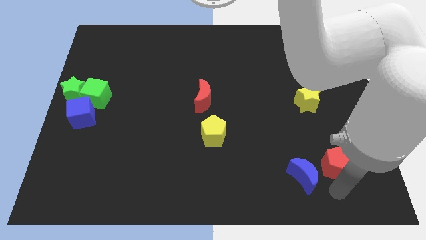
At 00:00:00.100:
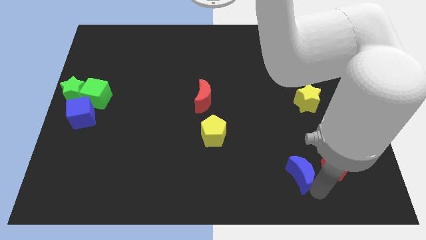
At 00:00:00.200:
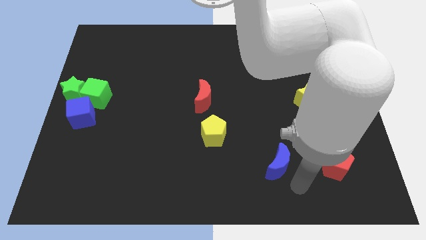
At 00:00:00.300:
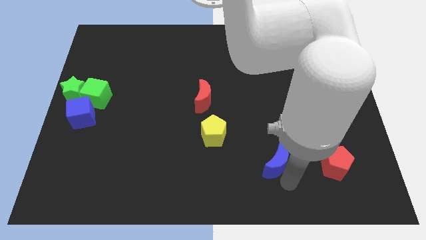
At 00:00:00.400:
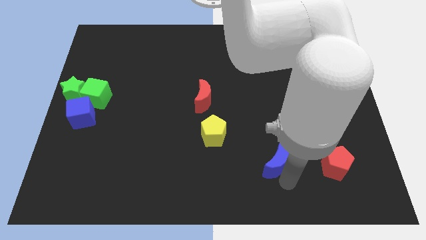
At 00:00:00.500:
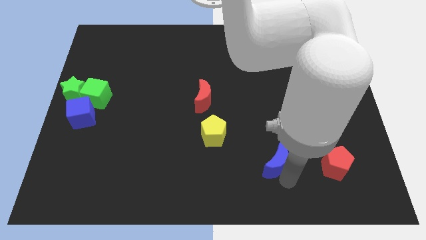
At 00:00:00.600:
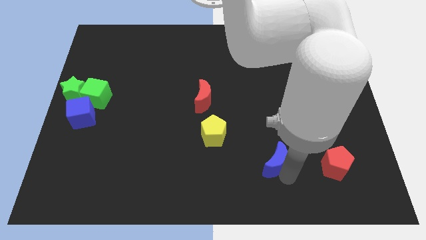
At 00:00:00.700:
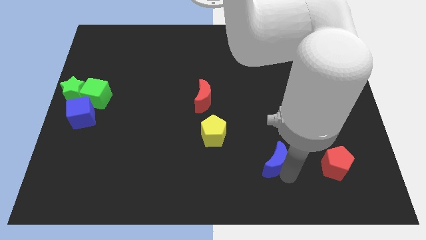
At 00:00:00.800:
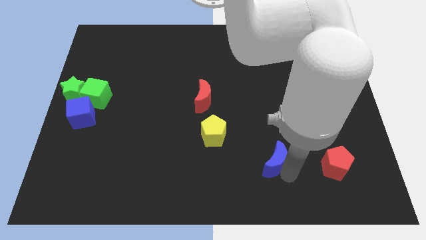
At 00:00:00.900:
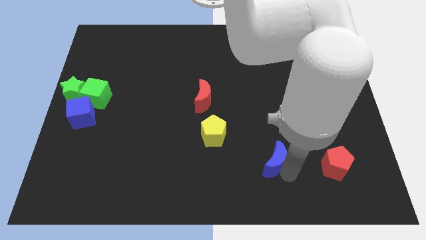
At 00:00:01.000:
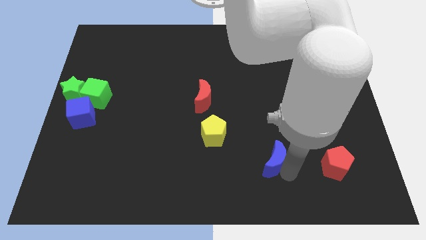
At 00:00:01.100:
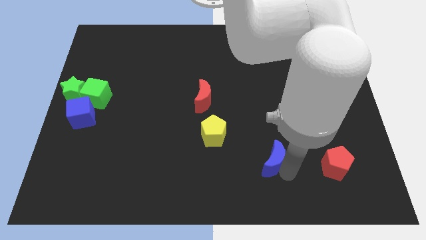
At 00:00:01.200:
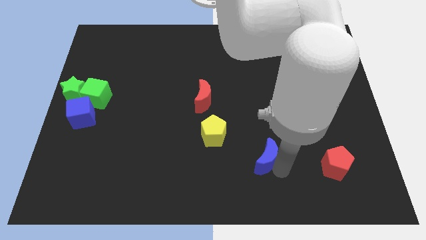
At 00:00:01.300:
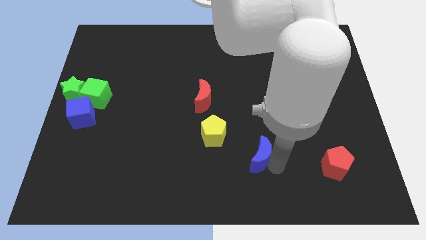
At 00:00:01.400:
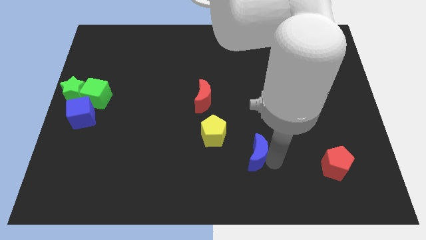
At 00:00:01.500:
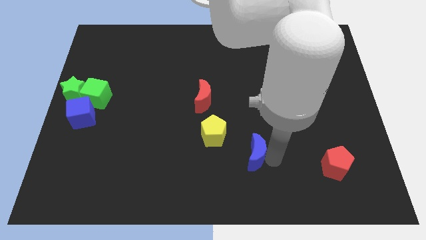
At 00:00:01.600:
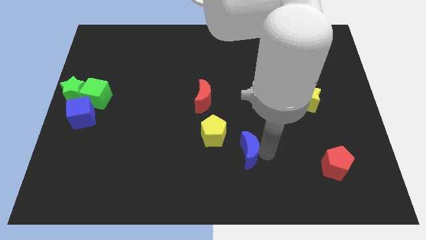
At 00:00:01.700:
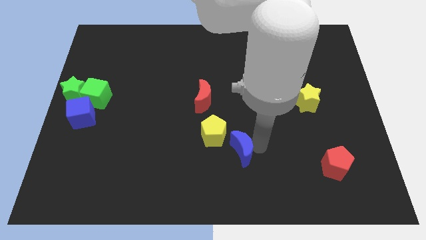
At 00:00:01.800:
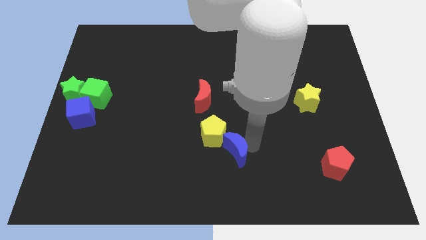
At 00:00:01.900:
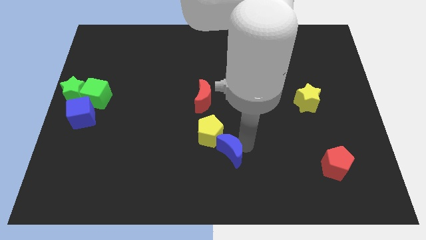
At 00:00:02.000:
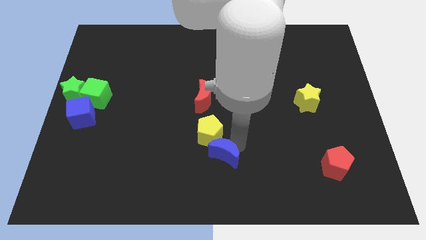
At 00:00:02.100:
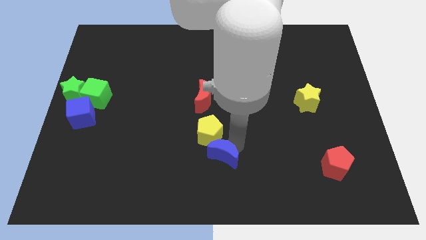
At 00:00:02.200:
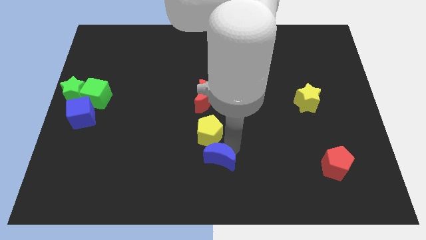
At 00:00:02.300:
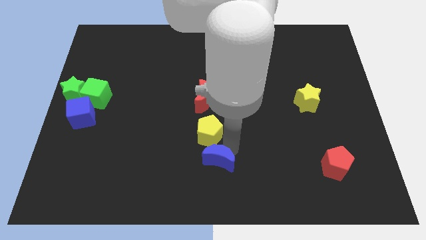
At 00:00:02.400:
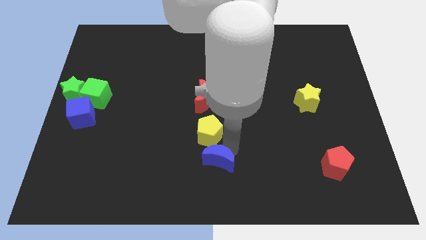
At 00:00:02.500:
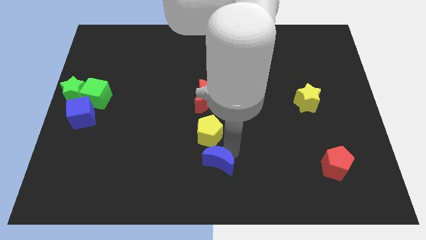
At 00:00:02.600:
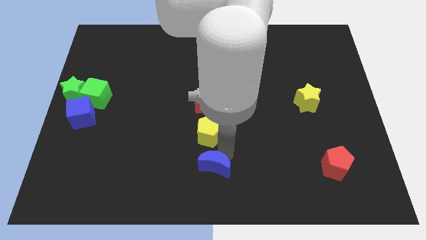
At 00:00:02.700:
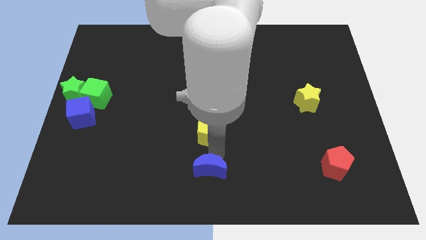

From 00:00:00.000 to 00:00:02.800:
place blue crescent below yellow pentagon

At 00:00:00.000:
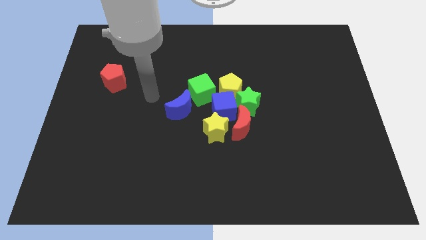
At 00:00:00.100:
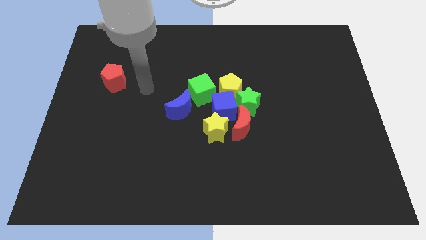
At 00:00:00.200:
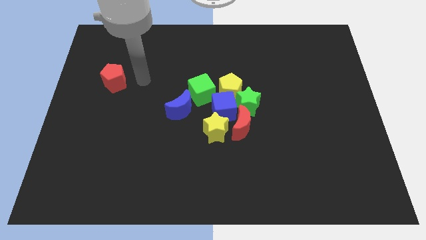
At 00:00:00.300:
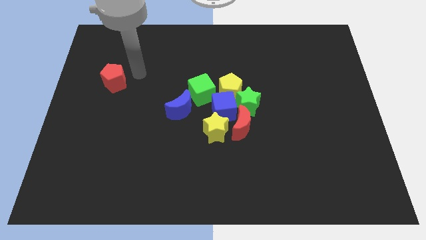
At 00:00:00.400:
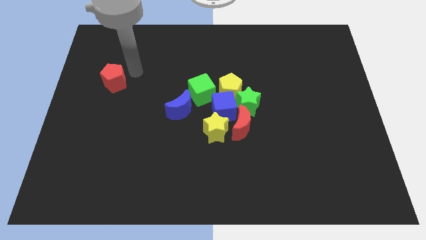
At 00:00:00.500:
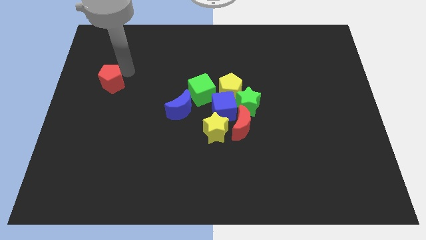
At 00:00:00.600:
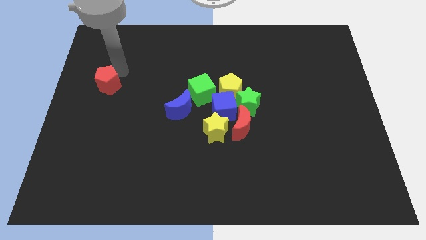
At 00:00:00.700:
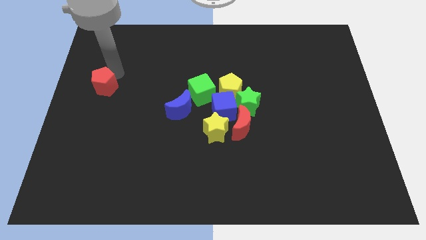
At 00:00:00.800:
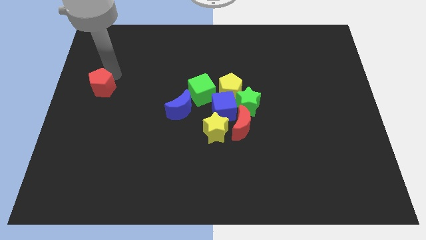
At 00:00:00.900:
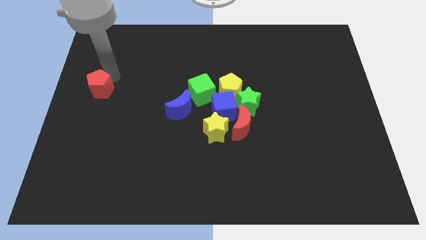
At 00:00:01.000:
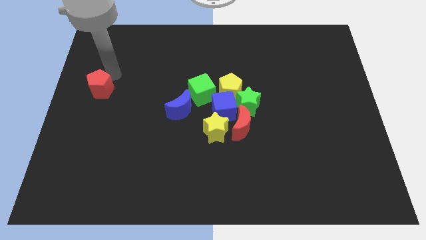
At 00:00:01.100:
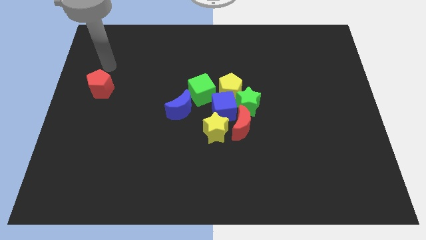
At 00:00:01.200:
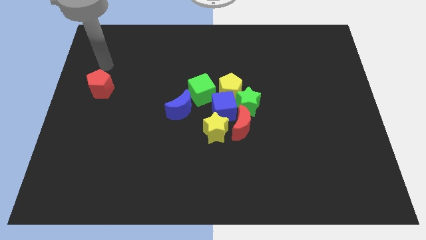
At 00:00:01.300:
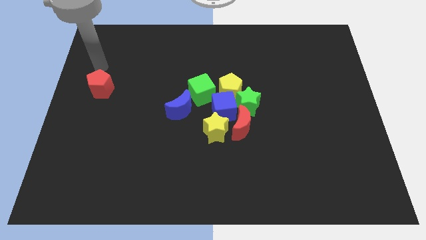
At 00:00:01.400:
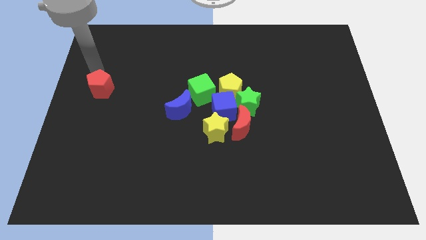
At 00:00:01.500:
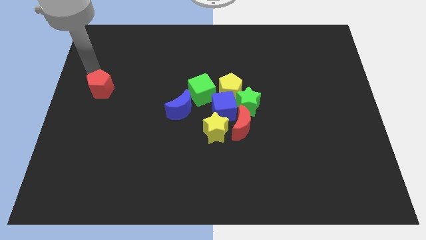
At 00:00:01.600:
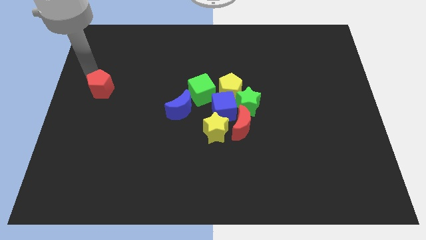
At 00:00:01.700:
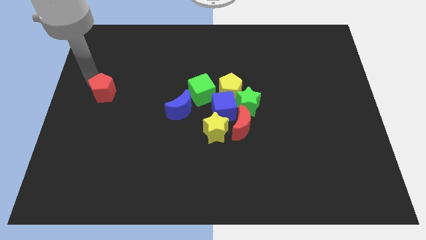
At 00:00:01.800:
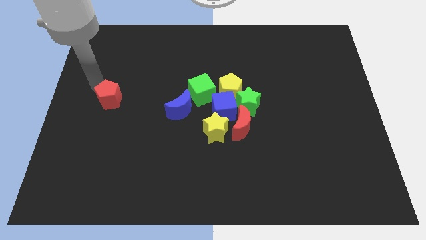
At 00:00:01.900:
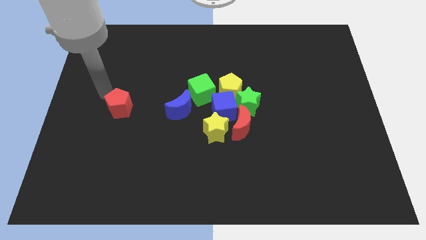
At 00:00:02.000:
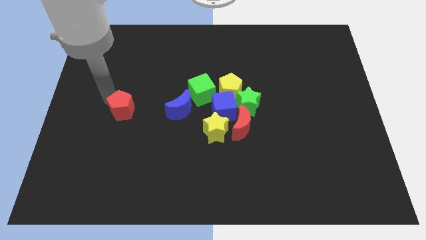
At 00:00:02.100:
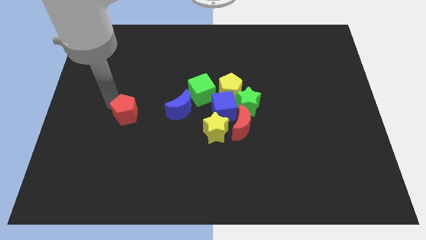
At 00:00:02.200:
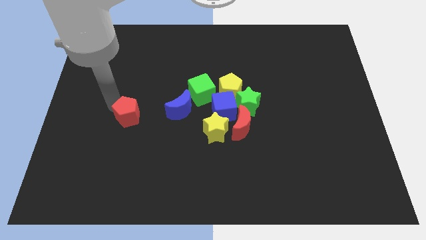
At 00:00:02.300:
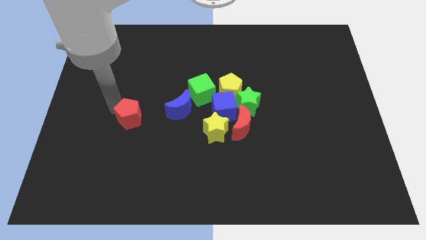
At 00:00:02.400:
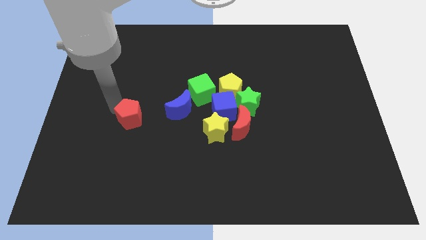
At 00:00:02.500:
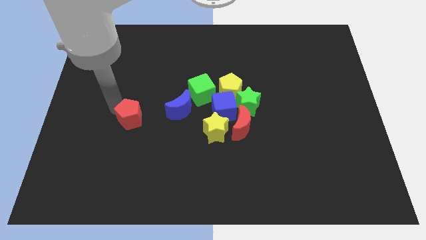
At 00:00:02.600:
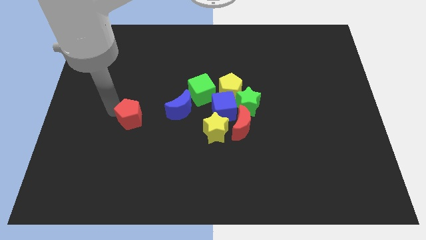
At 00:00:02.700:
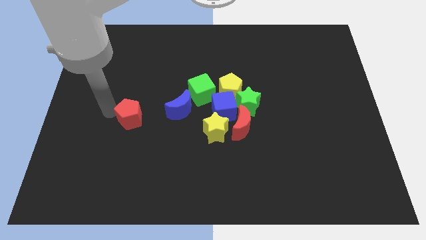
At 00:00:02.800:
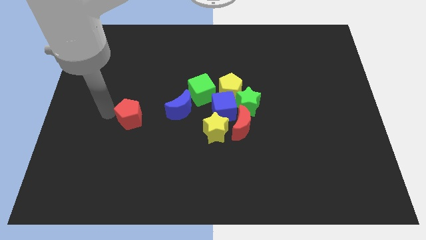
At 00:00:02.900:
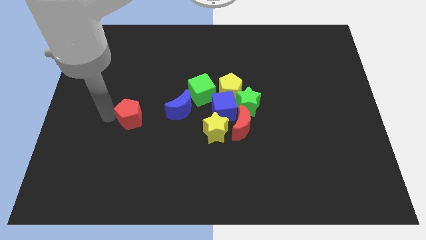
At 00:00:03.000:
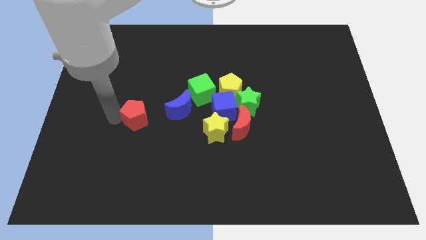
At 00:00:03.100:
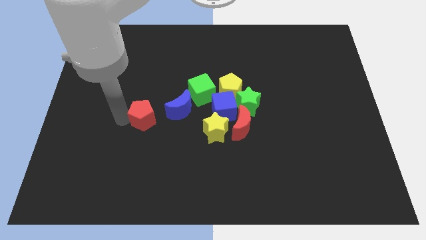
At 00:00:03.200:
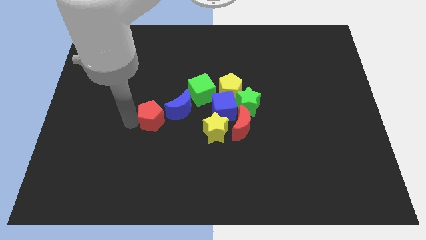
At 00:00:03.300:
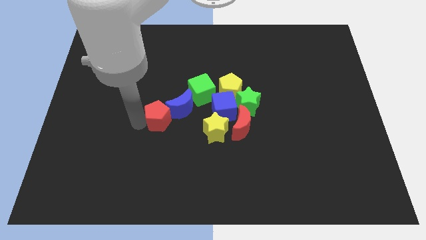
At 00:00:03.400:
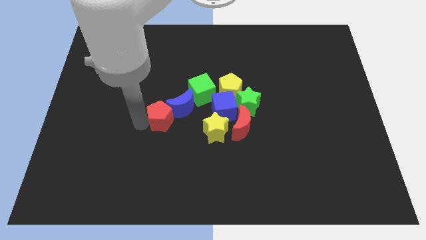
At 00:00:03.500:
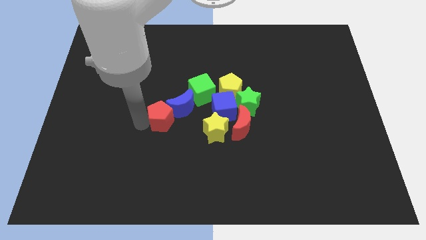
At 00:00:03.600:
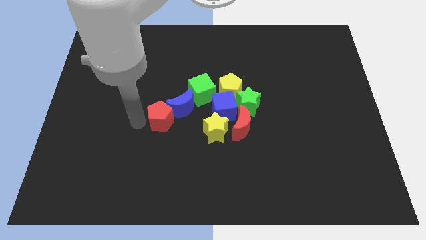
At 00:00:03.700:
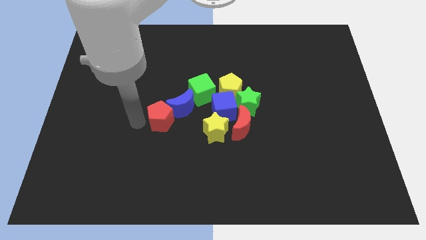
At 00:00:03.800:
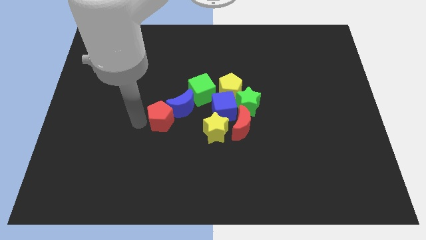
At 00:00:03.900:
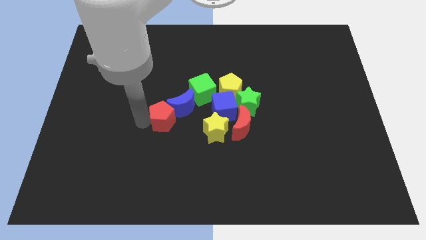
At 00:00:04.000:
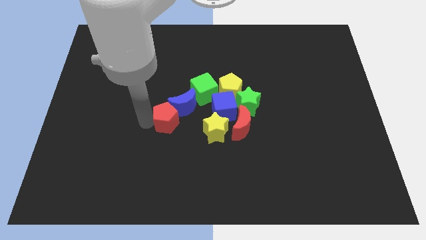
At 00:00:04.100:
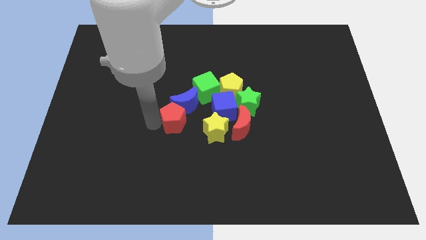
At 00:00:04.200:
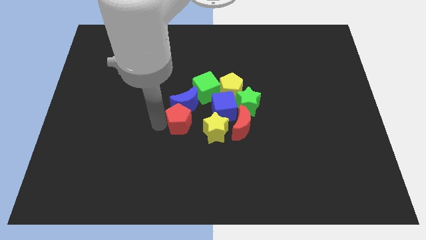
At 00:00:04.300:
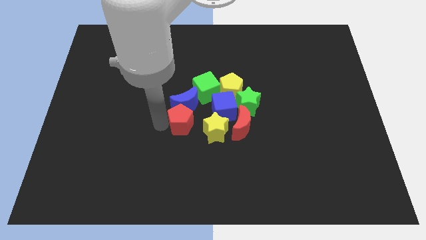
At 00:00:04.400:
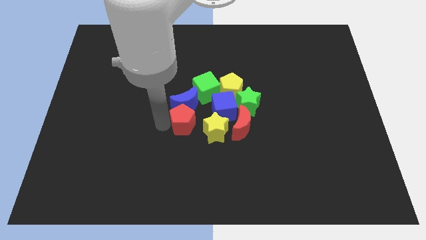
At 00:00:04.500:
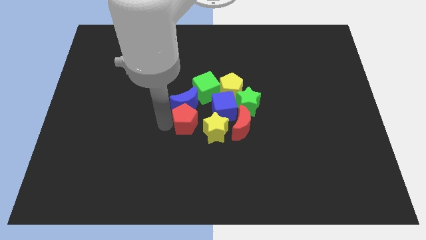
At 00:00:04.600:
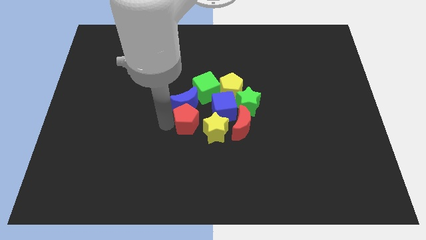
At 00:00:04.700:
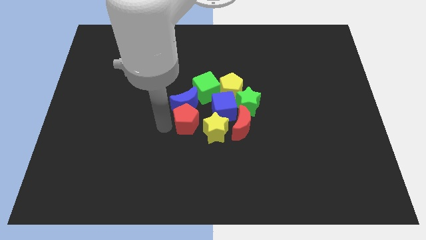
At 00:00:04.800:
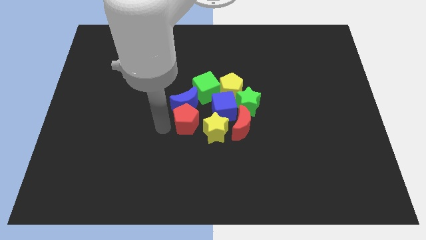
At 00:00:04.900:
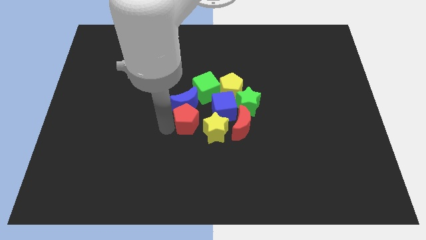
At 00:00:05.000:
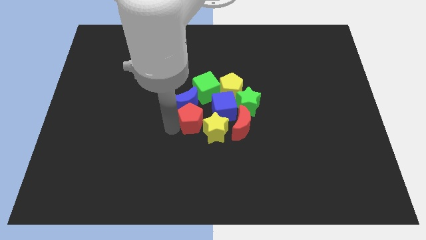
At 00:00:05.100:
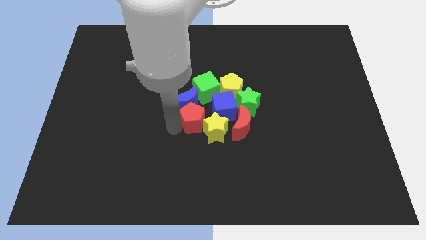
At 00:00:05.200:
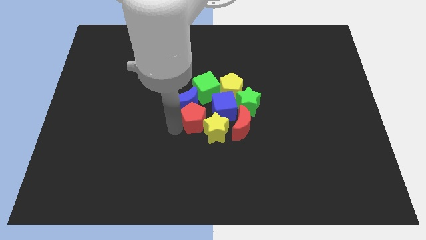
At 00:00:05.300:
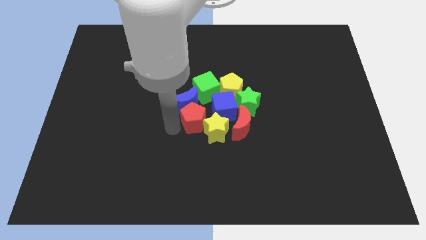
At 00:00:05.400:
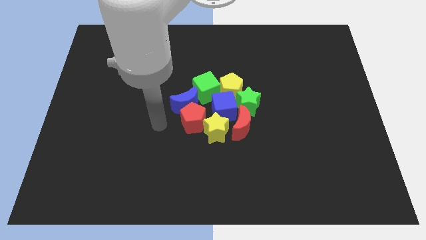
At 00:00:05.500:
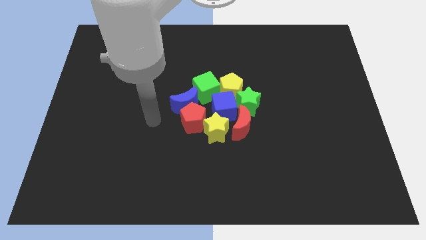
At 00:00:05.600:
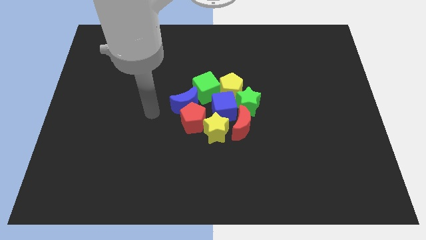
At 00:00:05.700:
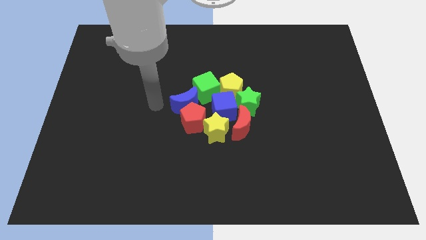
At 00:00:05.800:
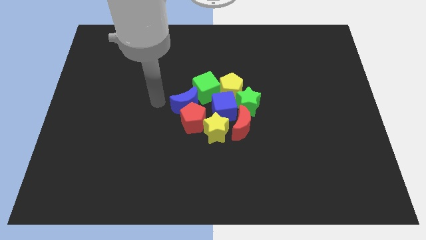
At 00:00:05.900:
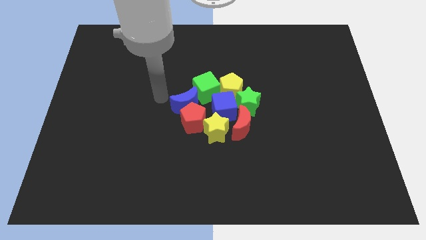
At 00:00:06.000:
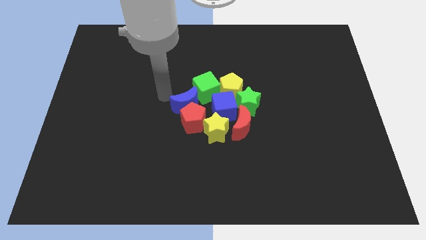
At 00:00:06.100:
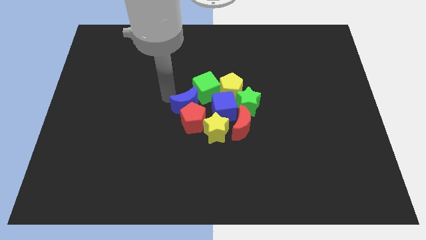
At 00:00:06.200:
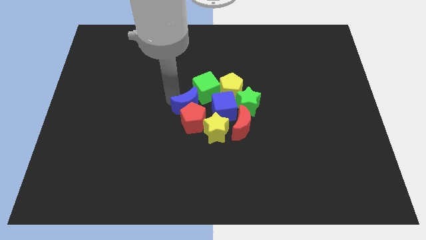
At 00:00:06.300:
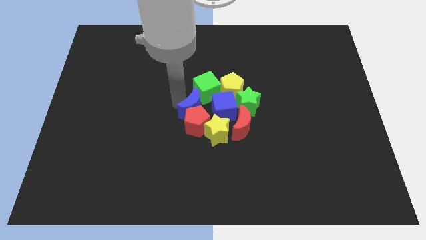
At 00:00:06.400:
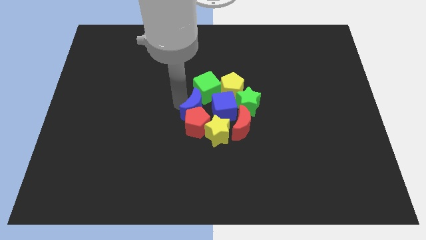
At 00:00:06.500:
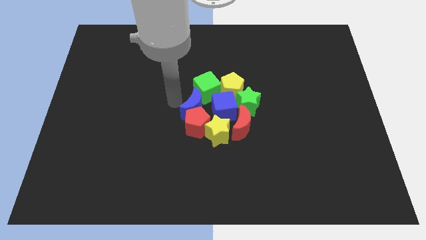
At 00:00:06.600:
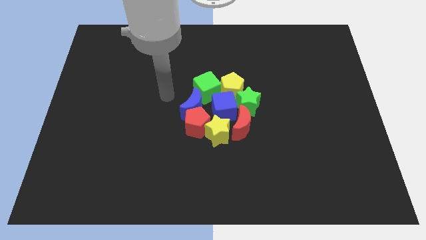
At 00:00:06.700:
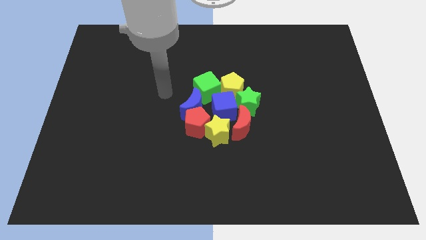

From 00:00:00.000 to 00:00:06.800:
place red pentagon to the bottom of green cube
